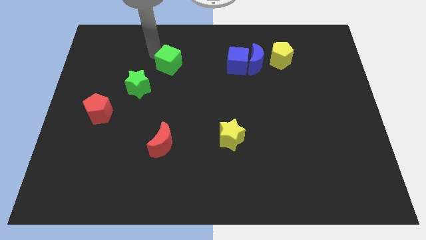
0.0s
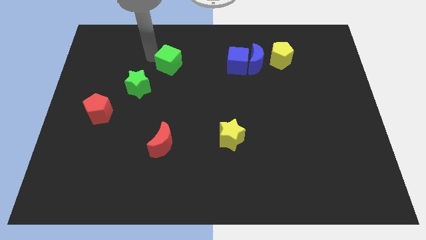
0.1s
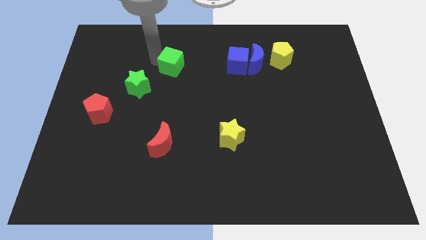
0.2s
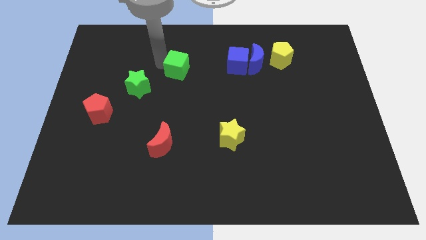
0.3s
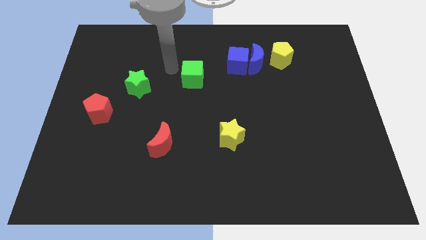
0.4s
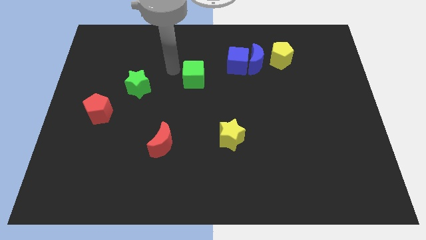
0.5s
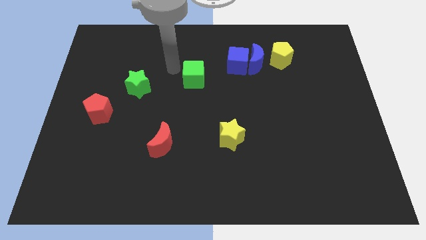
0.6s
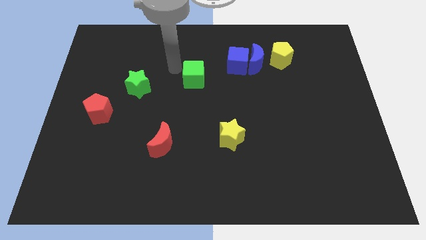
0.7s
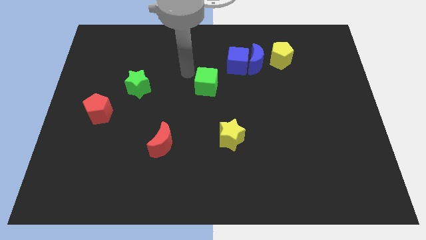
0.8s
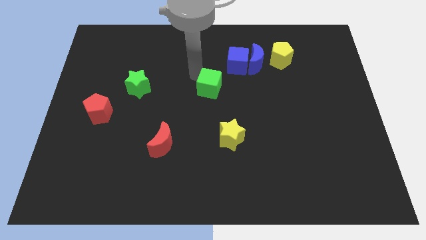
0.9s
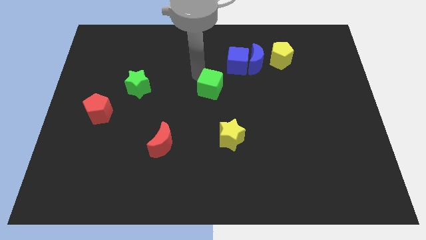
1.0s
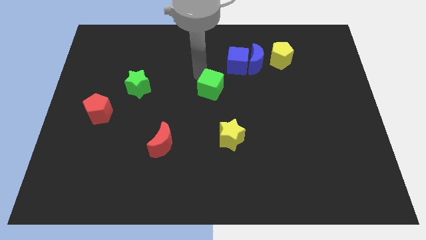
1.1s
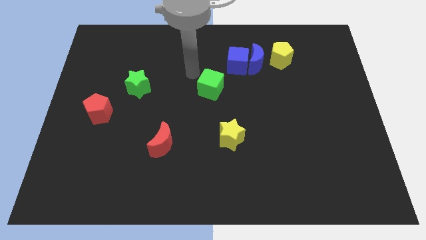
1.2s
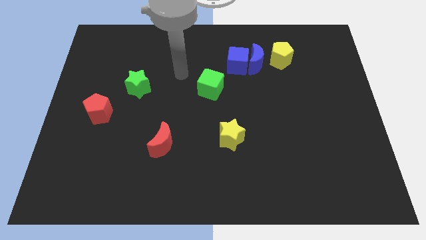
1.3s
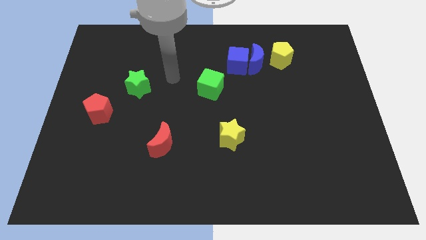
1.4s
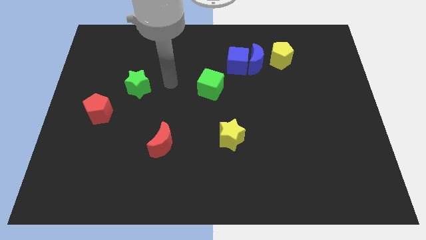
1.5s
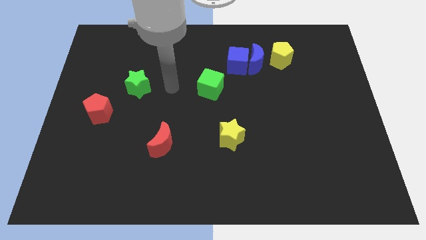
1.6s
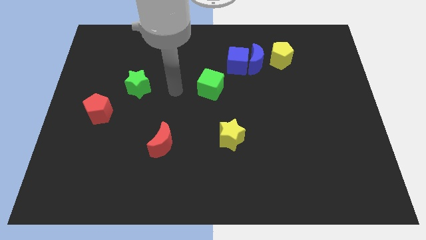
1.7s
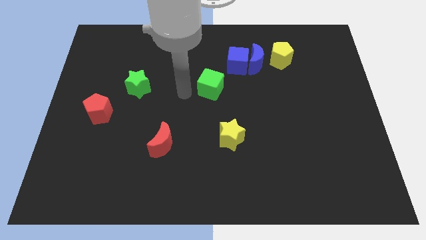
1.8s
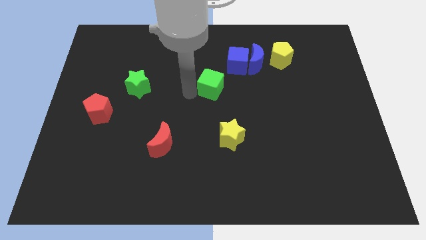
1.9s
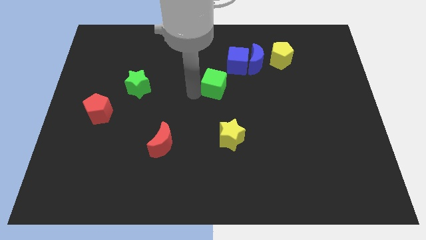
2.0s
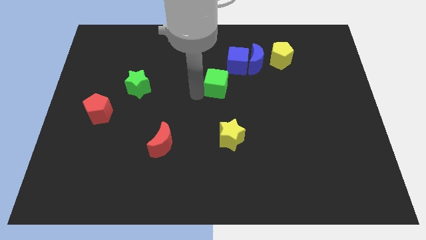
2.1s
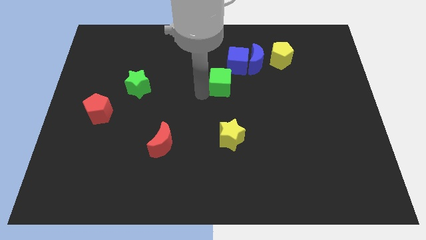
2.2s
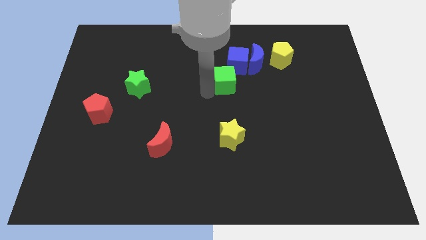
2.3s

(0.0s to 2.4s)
move the green cube to the bottom left of the blue cube

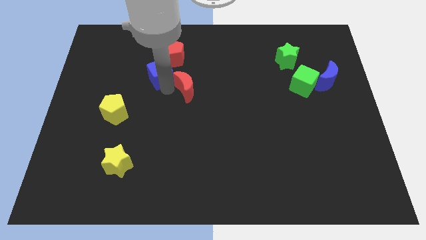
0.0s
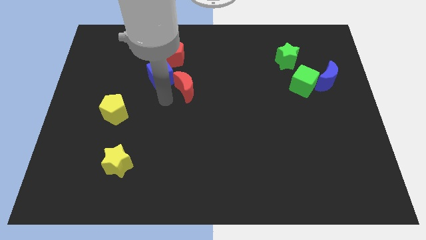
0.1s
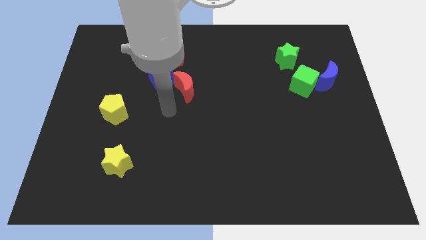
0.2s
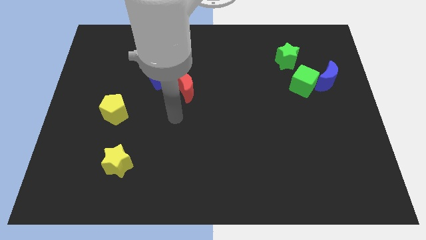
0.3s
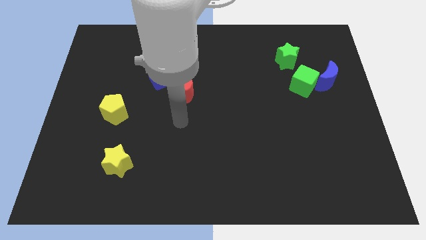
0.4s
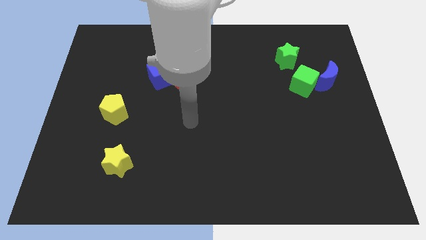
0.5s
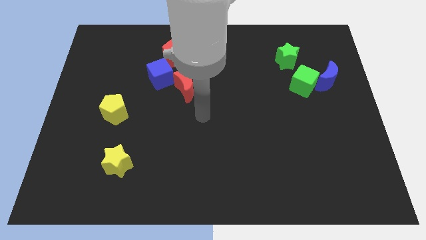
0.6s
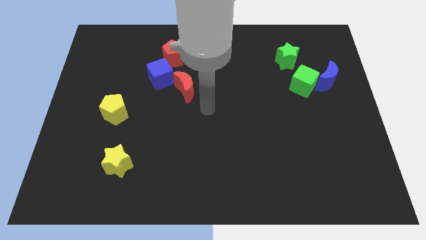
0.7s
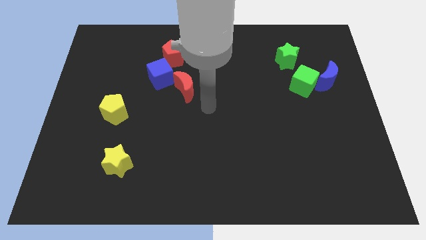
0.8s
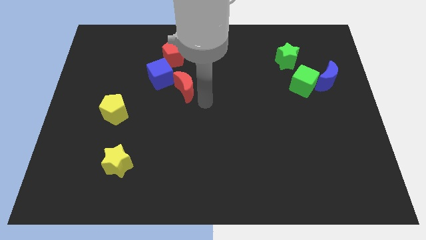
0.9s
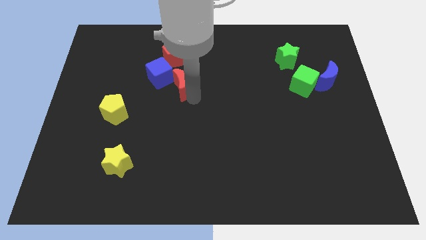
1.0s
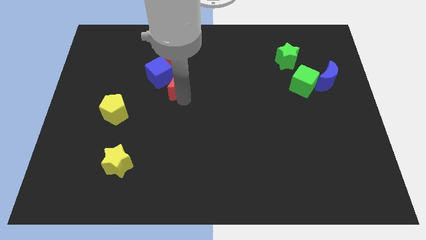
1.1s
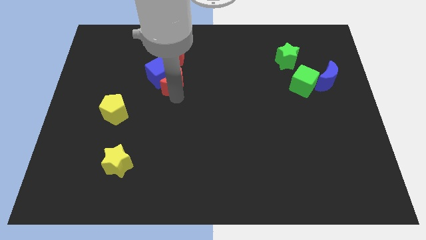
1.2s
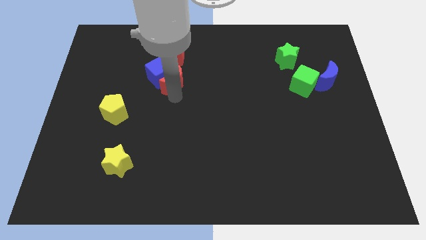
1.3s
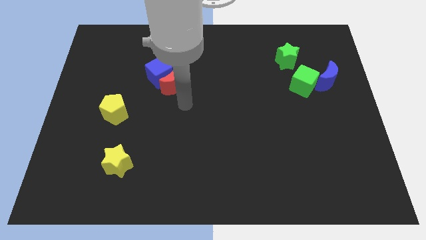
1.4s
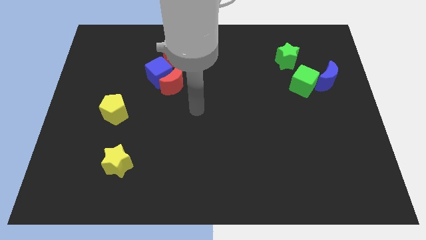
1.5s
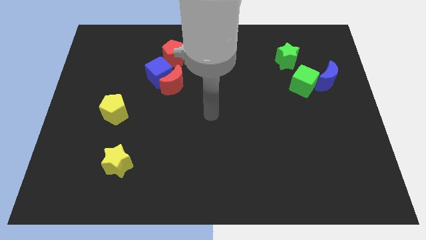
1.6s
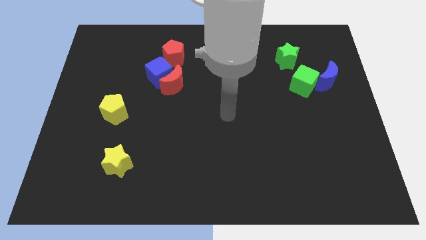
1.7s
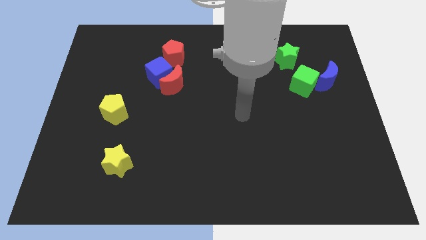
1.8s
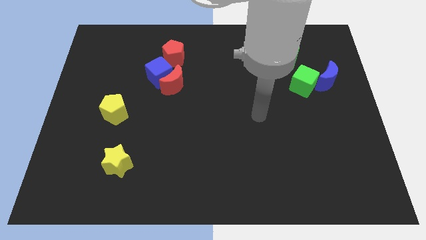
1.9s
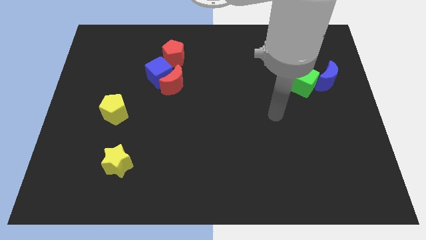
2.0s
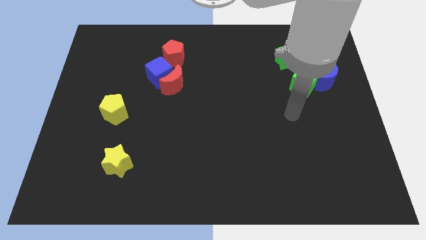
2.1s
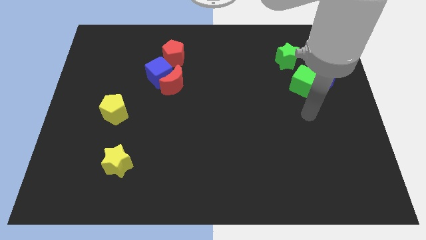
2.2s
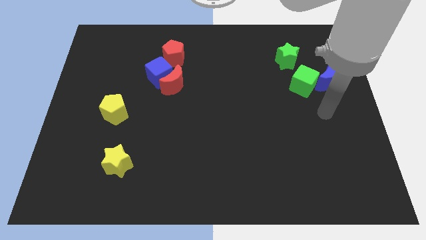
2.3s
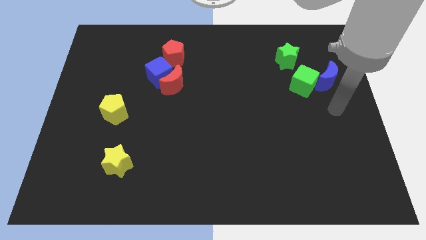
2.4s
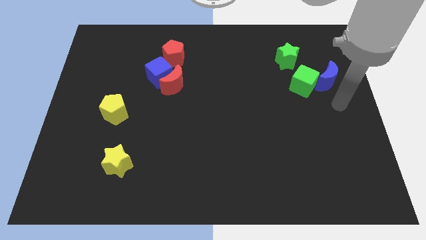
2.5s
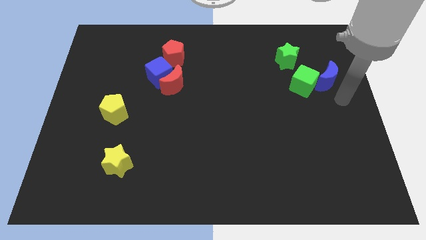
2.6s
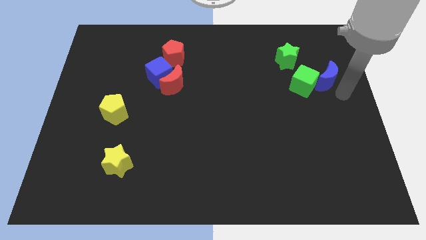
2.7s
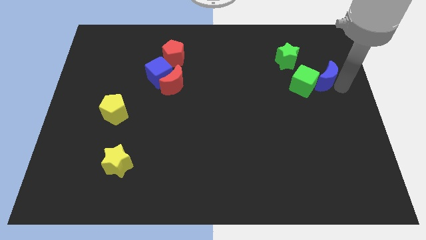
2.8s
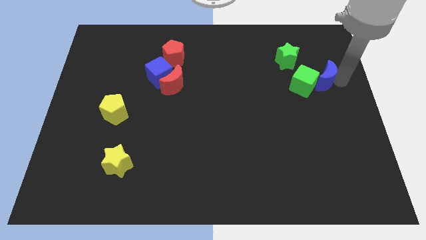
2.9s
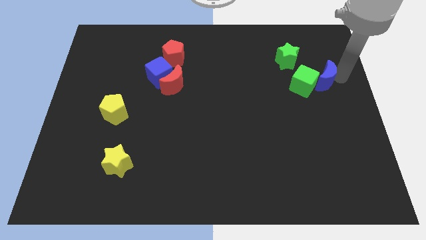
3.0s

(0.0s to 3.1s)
go near blue moon

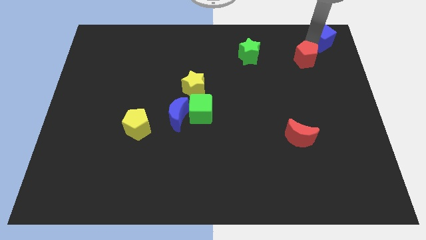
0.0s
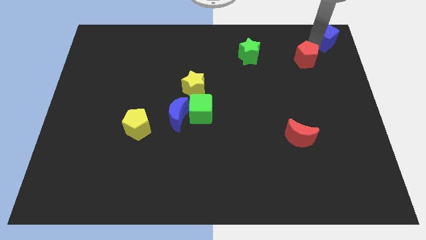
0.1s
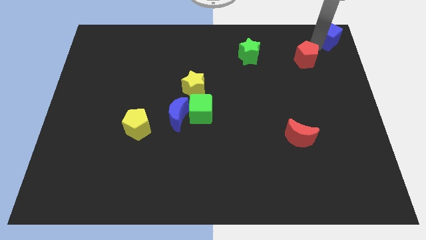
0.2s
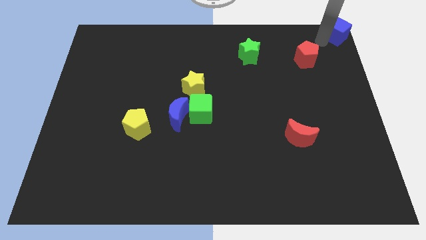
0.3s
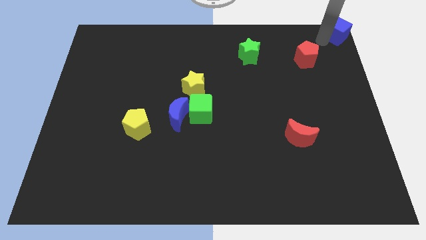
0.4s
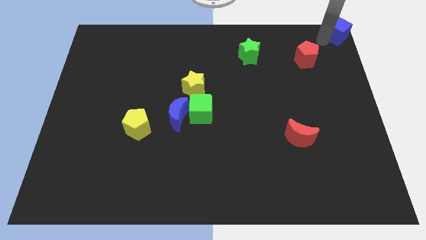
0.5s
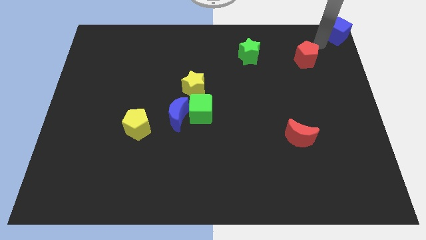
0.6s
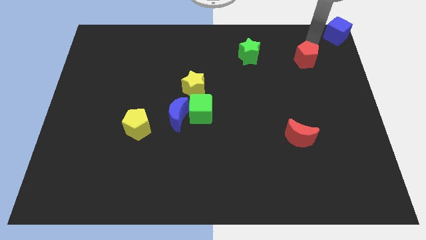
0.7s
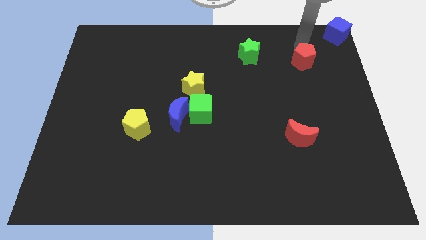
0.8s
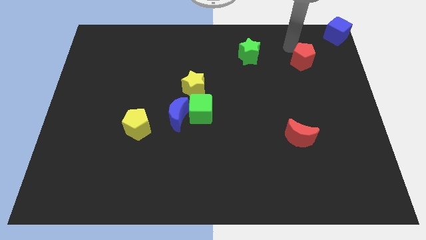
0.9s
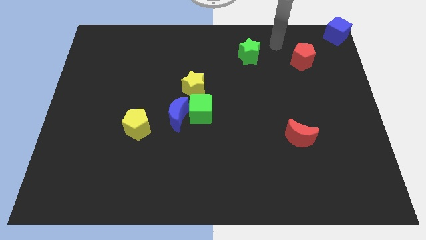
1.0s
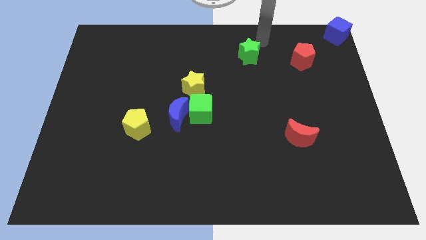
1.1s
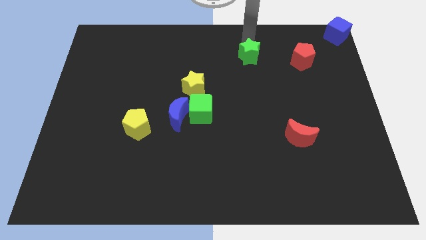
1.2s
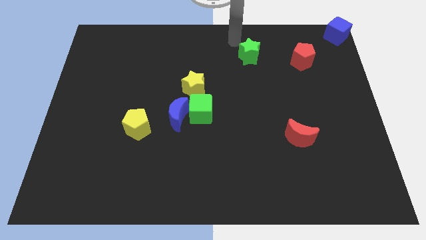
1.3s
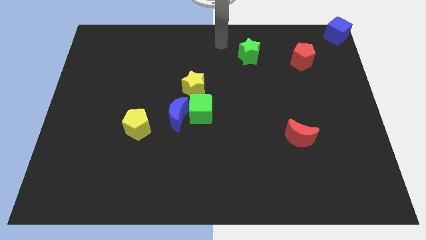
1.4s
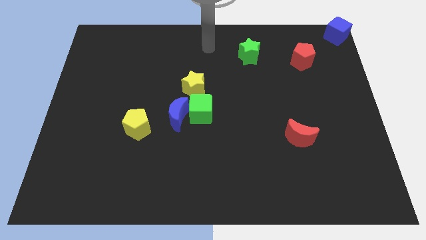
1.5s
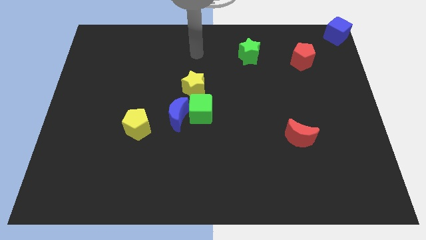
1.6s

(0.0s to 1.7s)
separate the blue cube and red pentagon

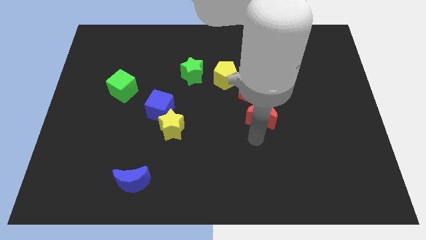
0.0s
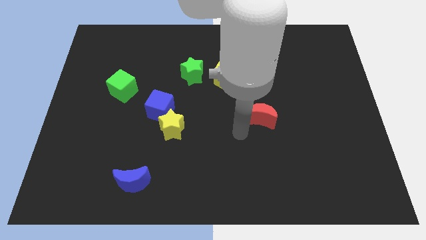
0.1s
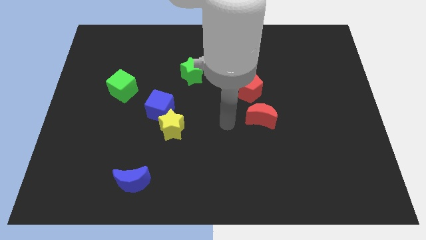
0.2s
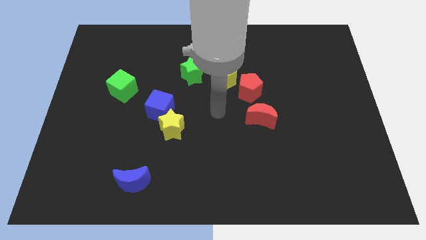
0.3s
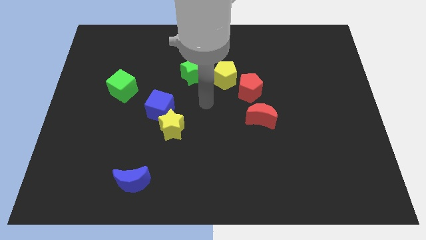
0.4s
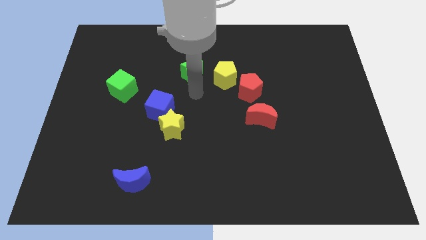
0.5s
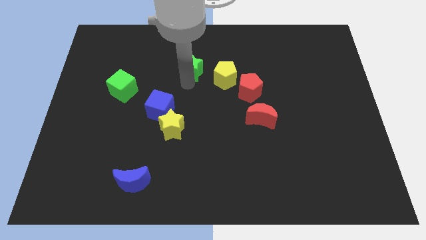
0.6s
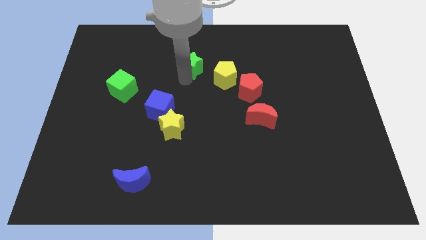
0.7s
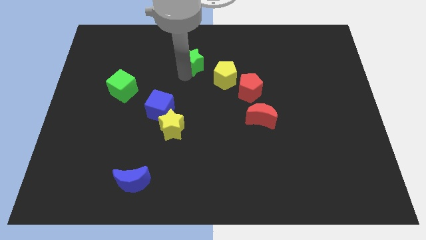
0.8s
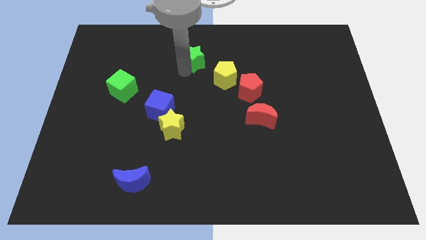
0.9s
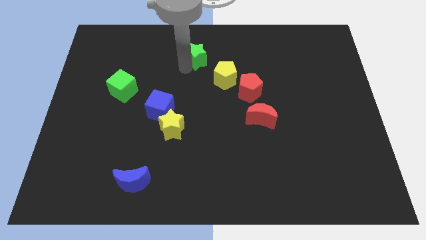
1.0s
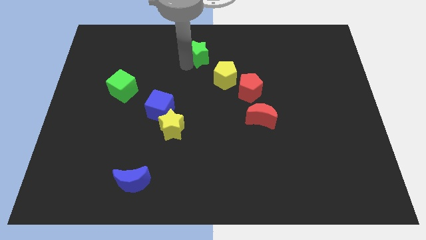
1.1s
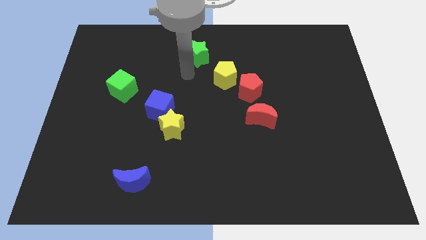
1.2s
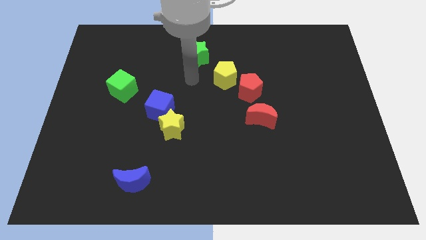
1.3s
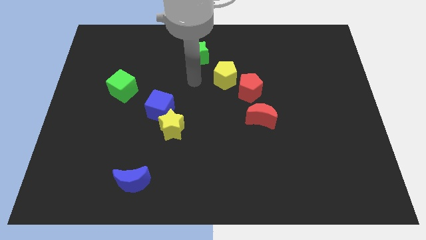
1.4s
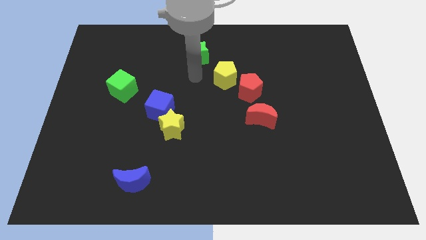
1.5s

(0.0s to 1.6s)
push the green star towards the top side of the board

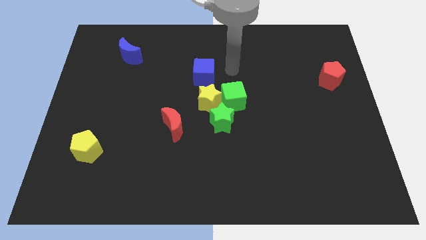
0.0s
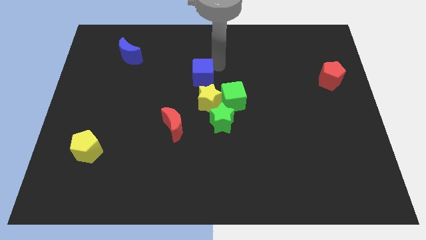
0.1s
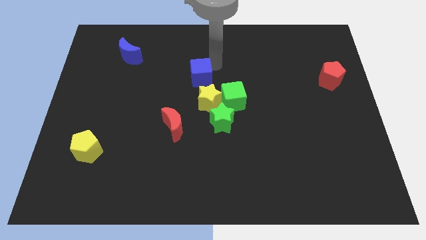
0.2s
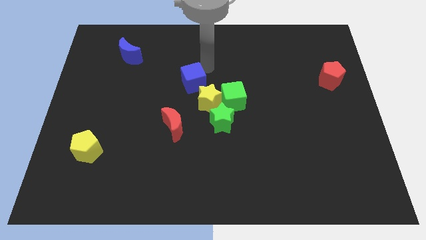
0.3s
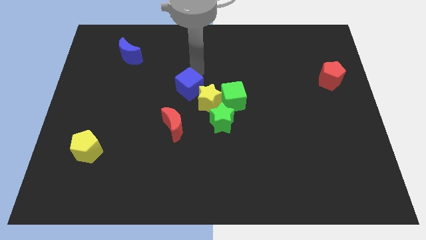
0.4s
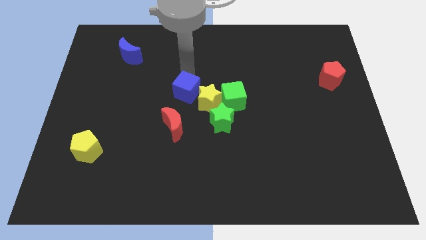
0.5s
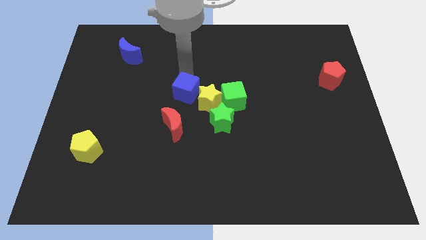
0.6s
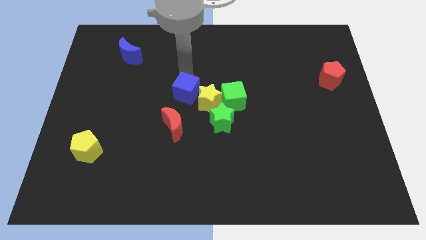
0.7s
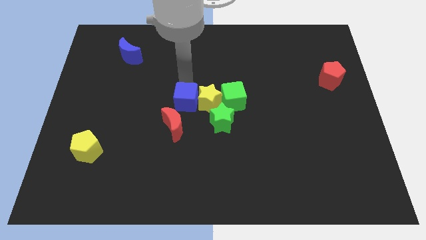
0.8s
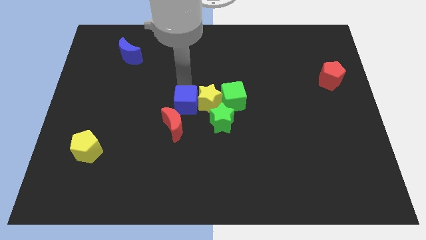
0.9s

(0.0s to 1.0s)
move the blue cube left to the yellow star
